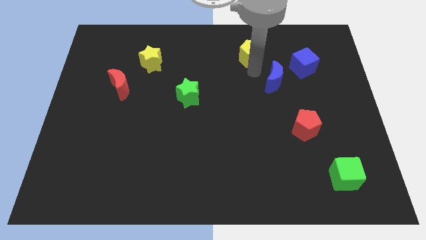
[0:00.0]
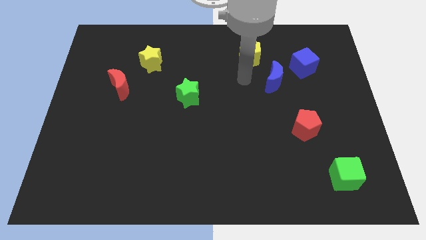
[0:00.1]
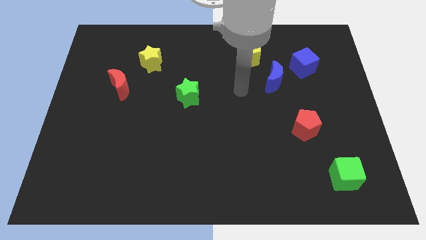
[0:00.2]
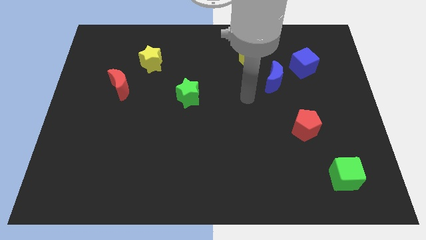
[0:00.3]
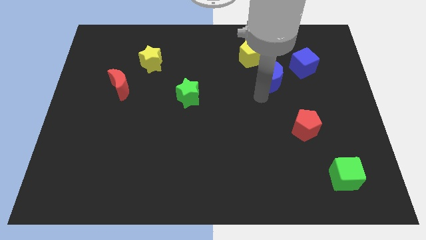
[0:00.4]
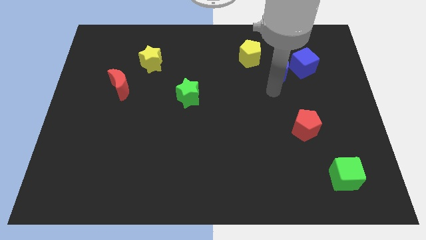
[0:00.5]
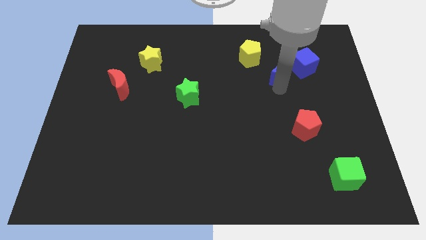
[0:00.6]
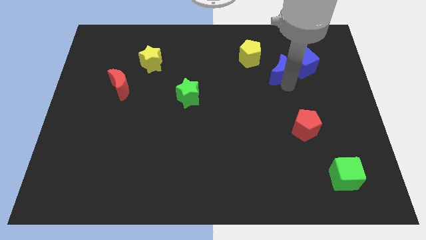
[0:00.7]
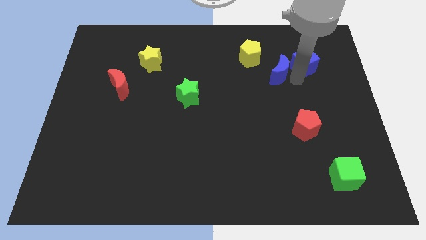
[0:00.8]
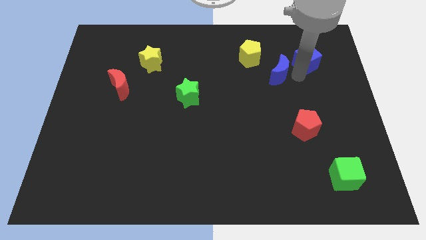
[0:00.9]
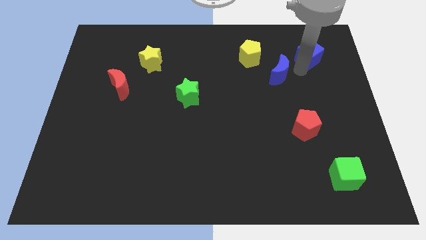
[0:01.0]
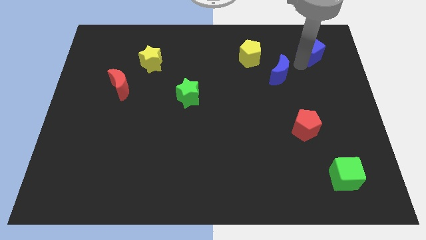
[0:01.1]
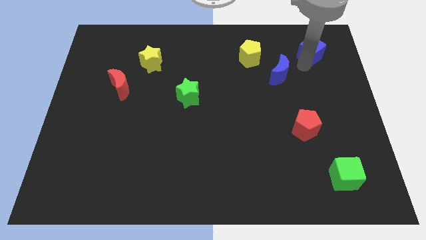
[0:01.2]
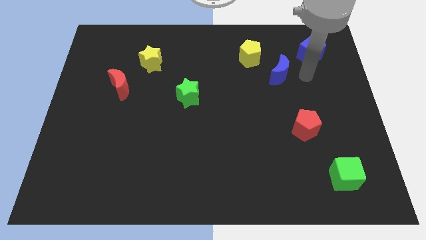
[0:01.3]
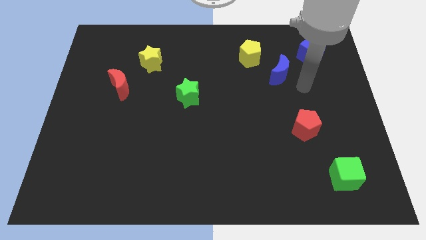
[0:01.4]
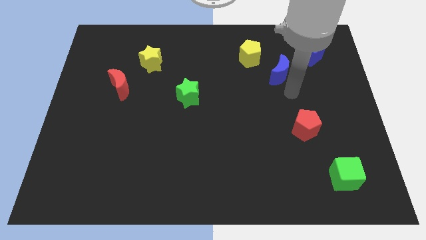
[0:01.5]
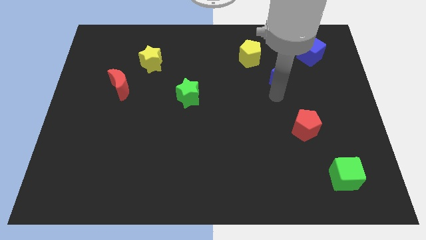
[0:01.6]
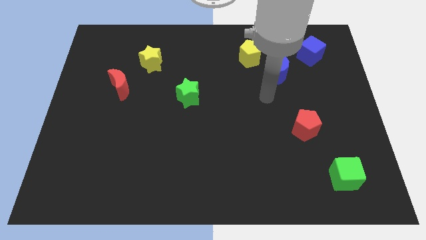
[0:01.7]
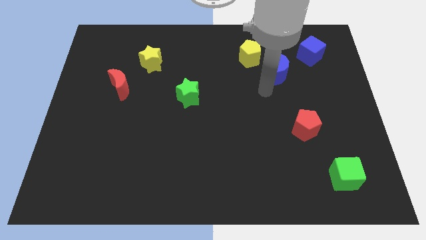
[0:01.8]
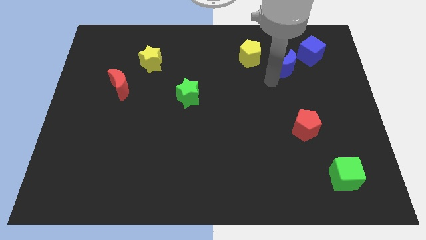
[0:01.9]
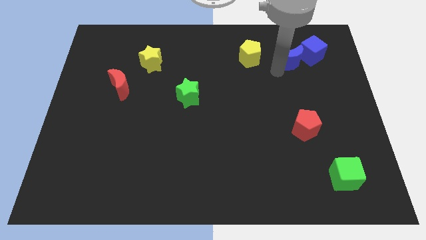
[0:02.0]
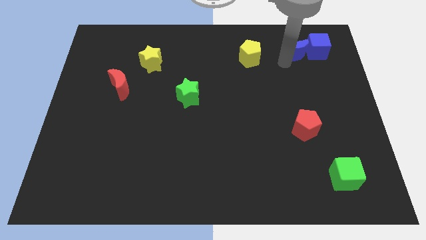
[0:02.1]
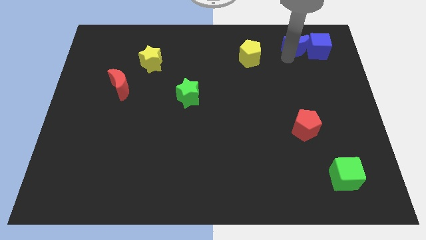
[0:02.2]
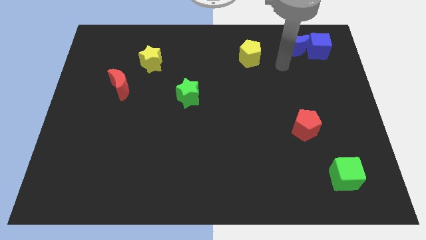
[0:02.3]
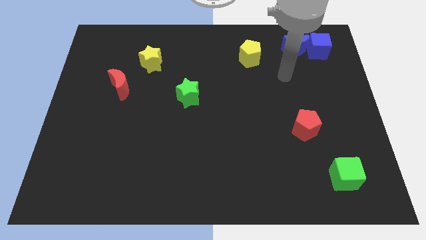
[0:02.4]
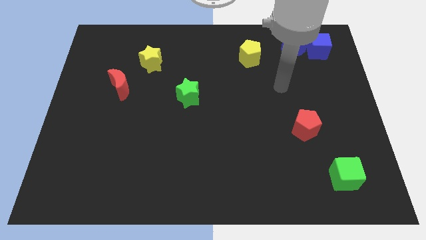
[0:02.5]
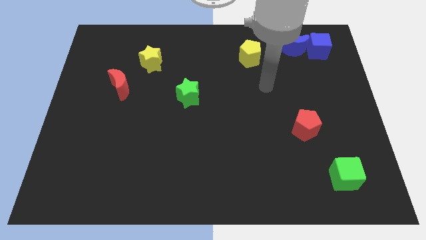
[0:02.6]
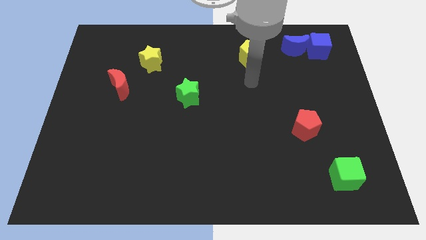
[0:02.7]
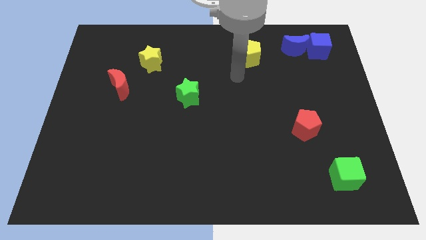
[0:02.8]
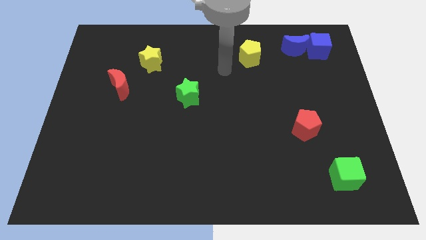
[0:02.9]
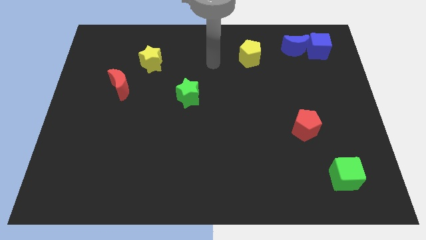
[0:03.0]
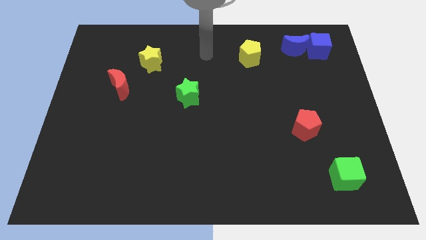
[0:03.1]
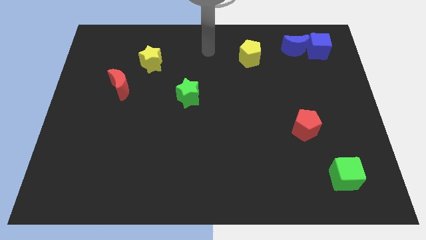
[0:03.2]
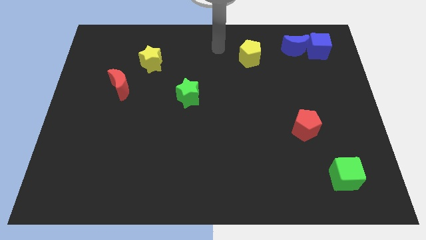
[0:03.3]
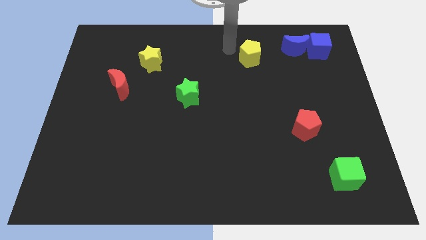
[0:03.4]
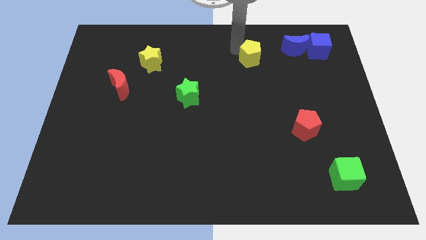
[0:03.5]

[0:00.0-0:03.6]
place both blue objects together

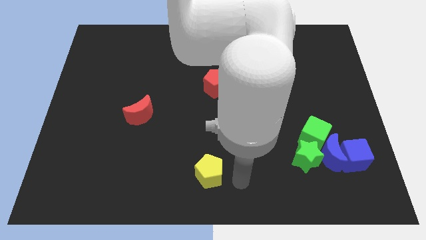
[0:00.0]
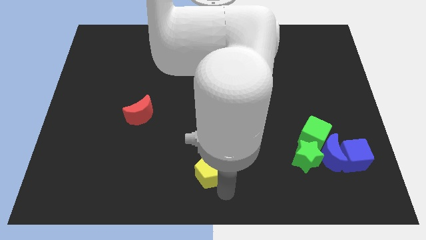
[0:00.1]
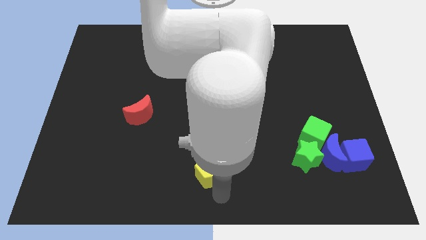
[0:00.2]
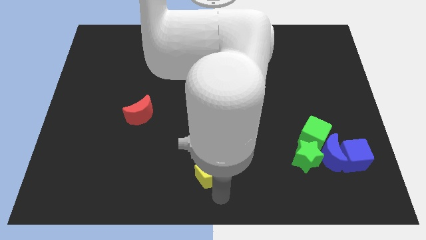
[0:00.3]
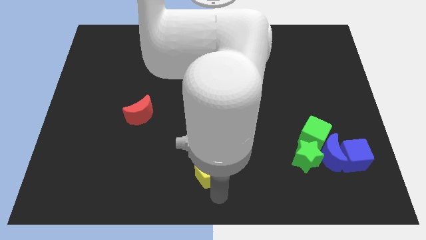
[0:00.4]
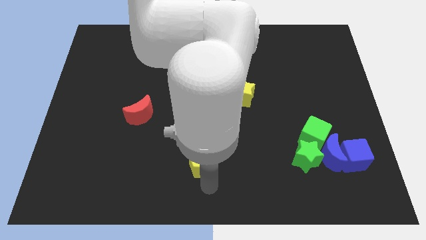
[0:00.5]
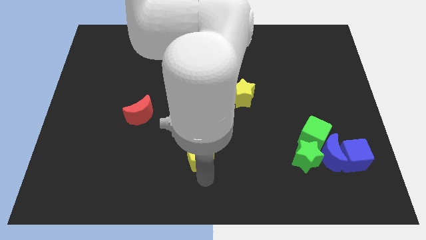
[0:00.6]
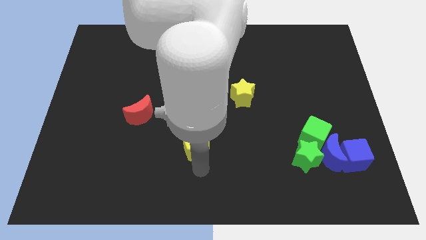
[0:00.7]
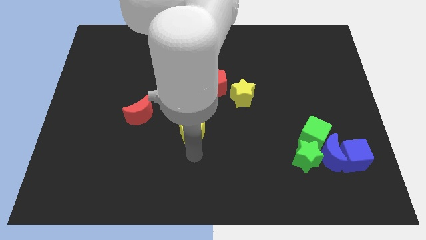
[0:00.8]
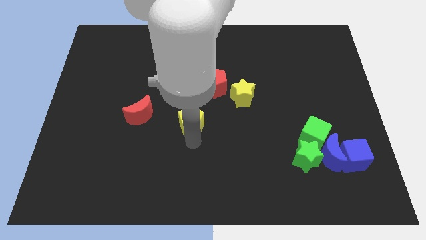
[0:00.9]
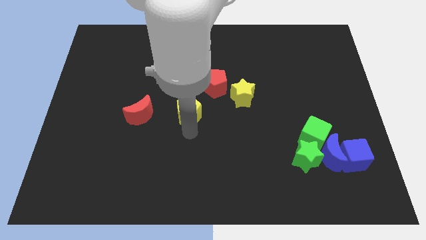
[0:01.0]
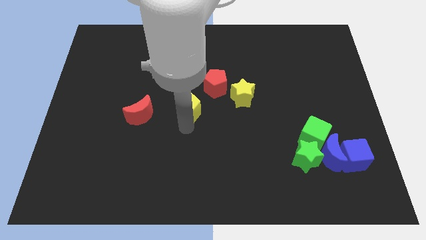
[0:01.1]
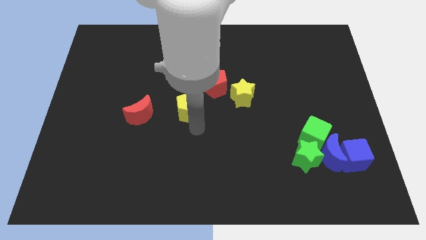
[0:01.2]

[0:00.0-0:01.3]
push the yellow pentagon upwards

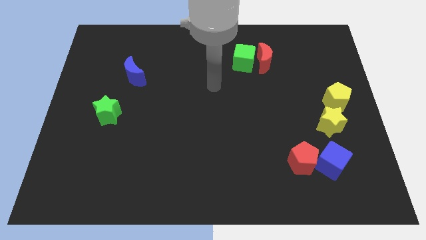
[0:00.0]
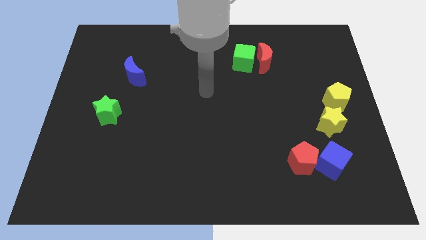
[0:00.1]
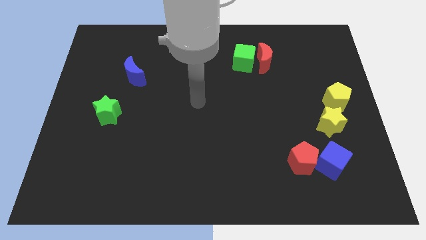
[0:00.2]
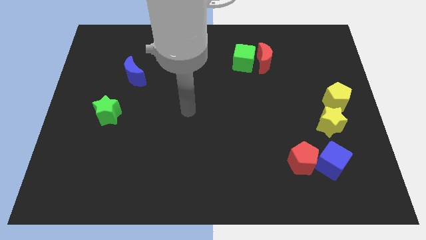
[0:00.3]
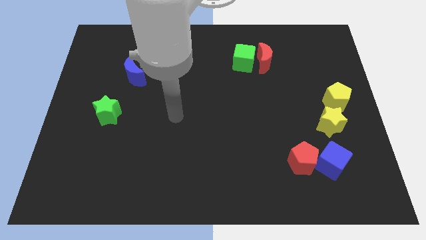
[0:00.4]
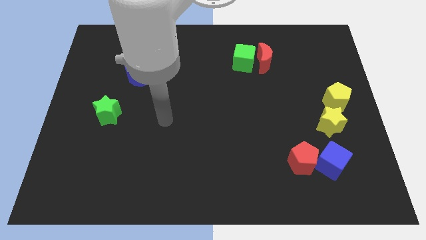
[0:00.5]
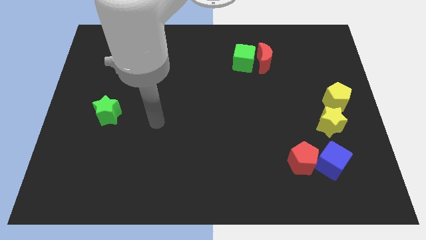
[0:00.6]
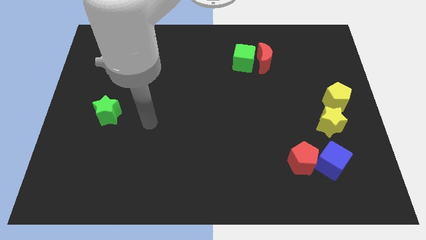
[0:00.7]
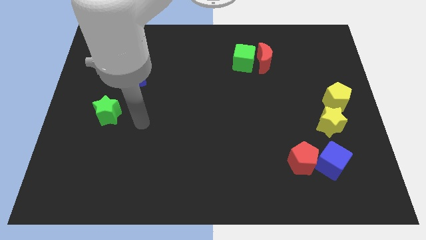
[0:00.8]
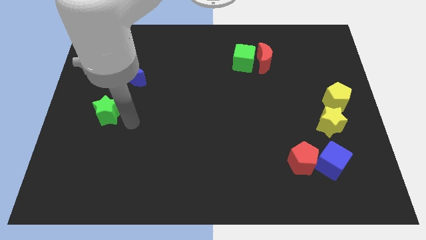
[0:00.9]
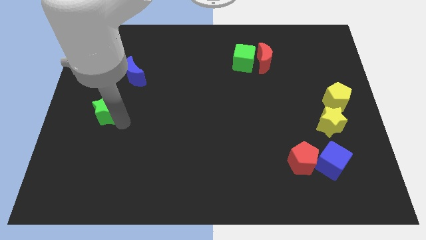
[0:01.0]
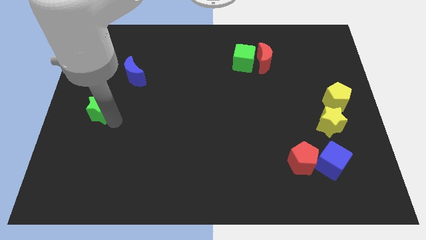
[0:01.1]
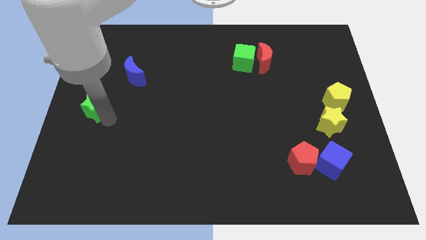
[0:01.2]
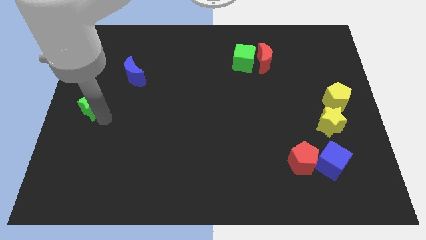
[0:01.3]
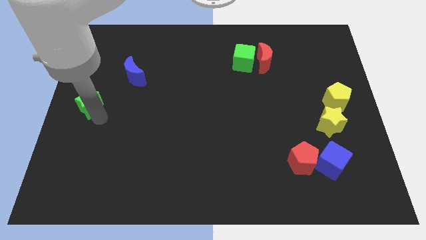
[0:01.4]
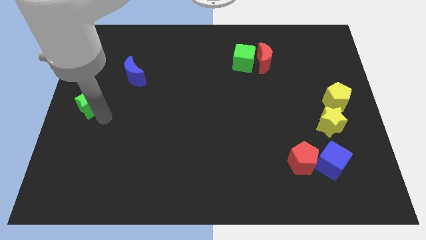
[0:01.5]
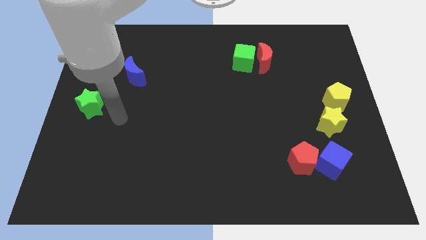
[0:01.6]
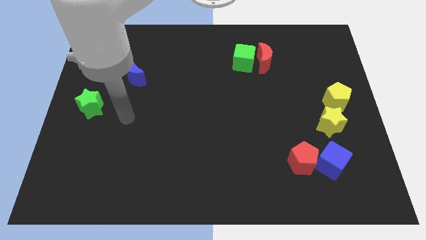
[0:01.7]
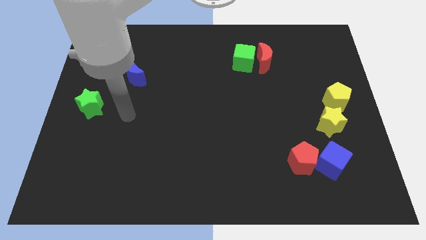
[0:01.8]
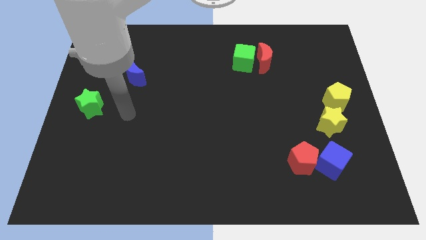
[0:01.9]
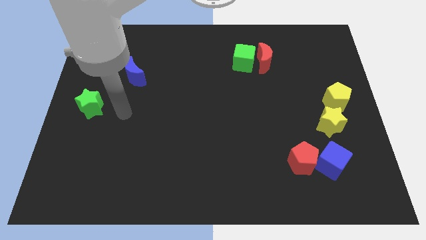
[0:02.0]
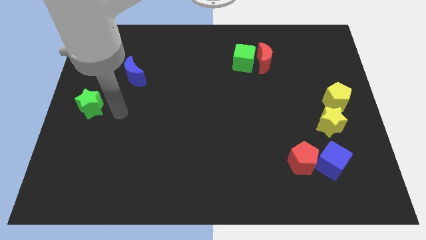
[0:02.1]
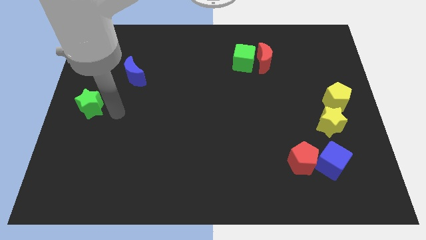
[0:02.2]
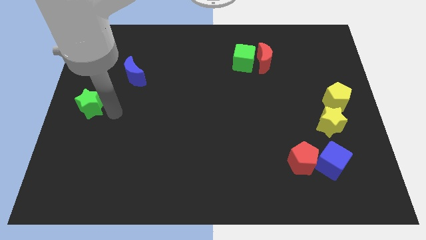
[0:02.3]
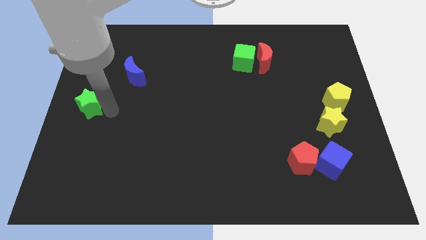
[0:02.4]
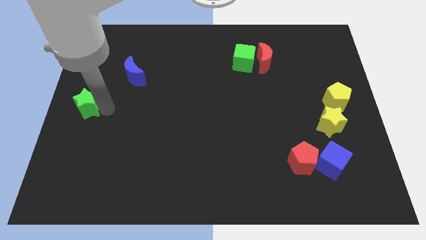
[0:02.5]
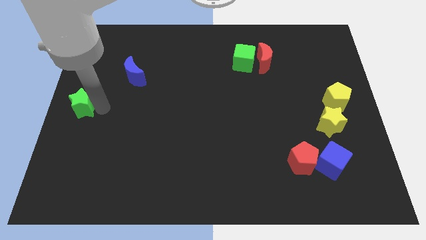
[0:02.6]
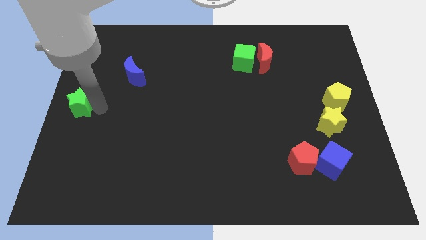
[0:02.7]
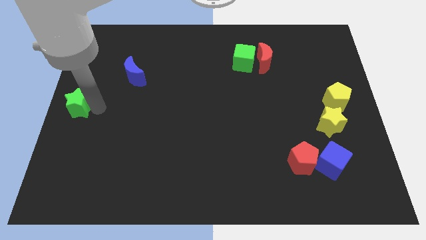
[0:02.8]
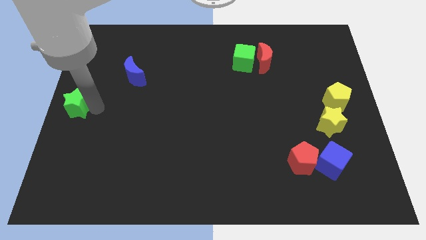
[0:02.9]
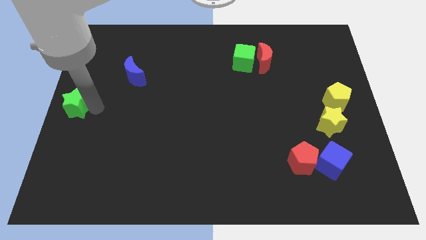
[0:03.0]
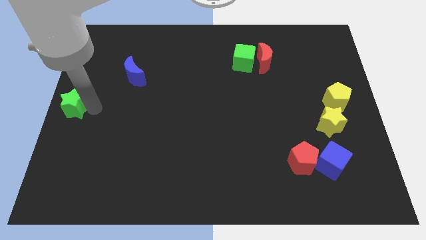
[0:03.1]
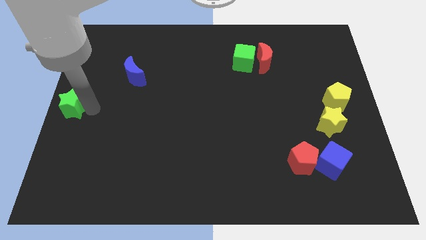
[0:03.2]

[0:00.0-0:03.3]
move the green star to the middle left

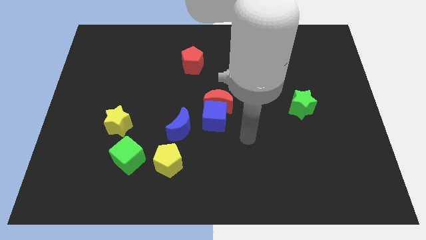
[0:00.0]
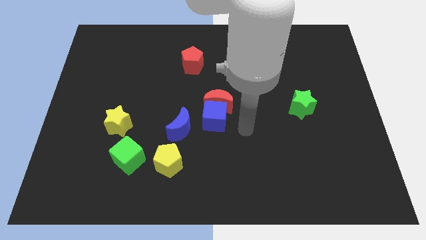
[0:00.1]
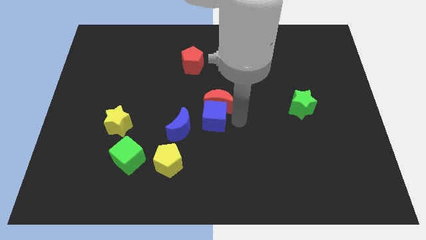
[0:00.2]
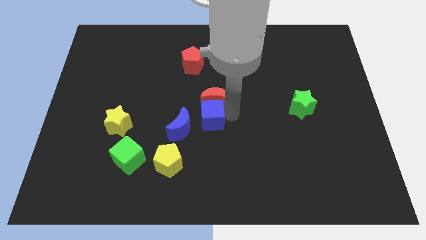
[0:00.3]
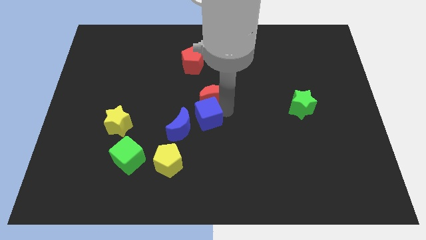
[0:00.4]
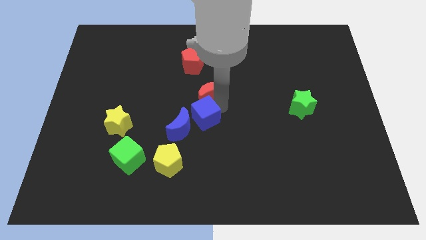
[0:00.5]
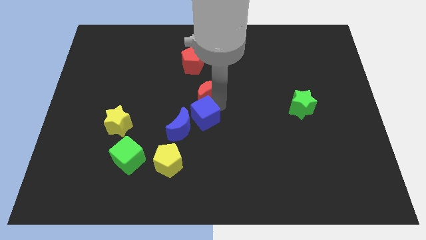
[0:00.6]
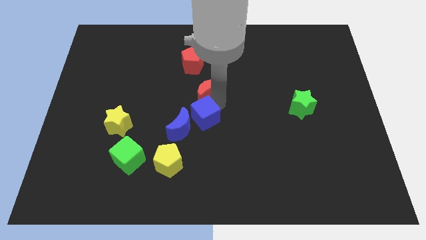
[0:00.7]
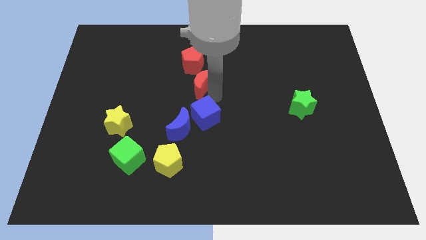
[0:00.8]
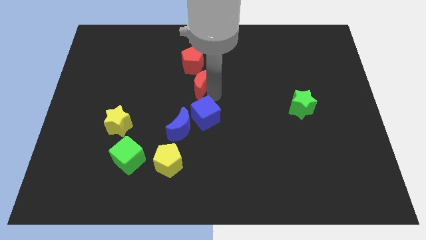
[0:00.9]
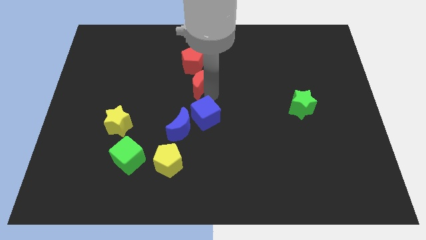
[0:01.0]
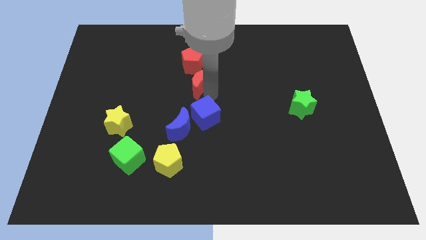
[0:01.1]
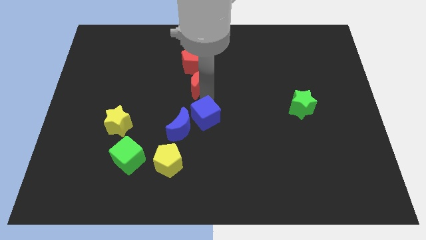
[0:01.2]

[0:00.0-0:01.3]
separate red moon from the blue cube
